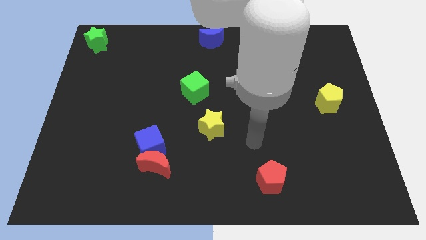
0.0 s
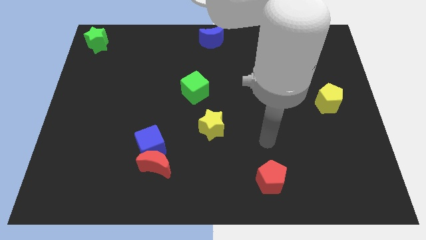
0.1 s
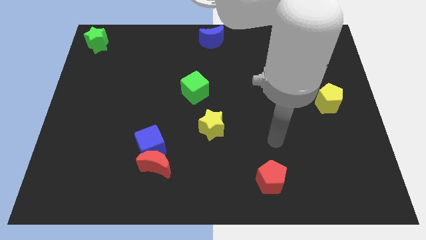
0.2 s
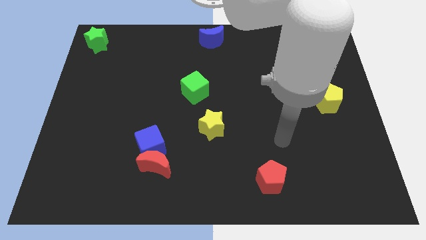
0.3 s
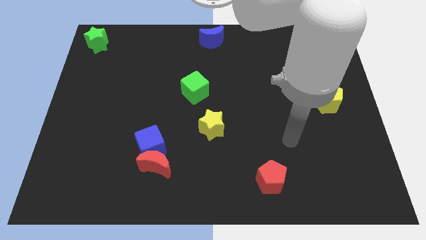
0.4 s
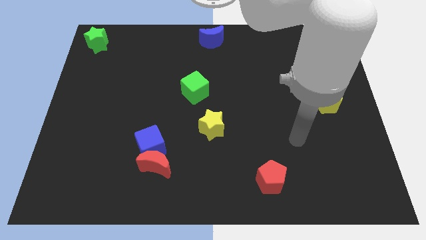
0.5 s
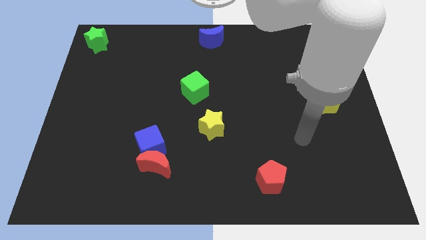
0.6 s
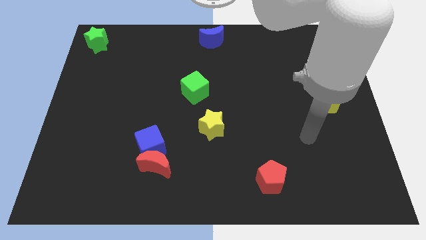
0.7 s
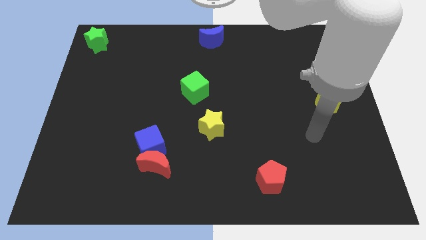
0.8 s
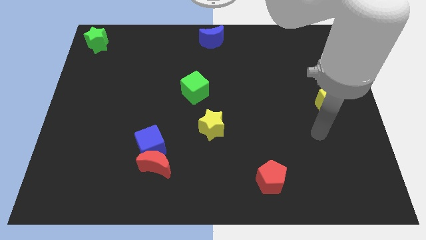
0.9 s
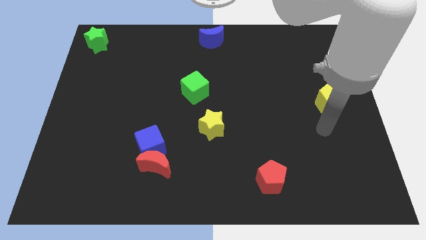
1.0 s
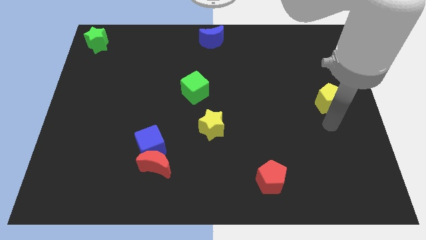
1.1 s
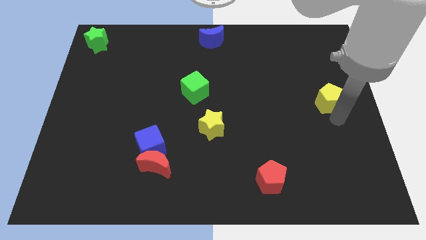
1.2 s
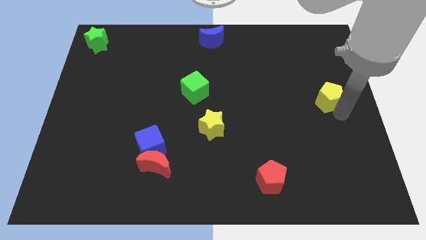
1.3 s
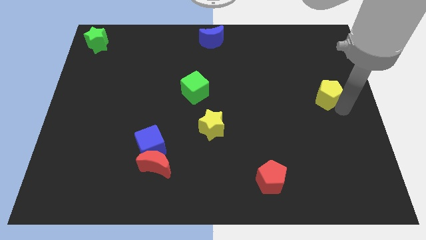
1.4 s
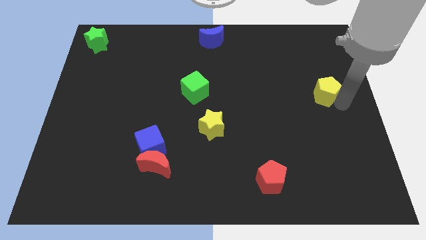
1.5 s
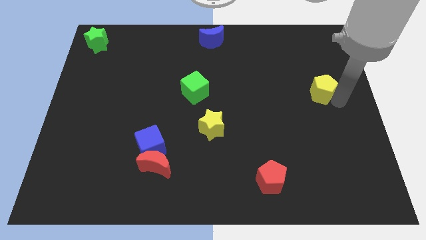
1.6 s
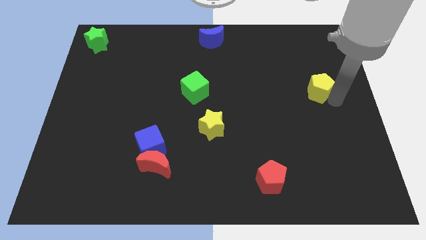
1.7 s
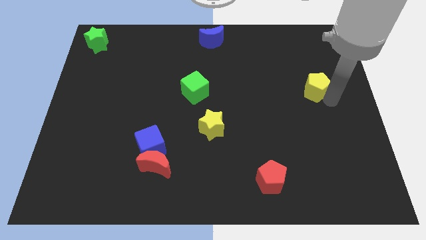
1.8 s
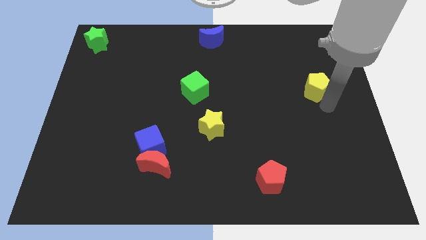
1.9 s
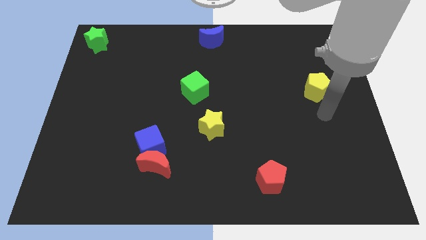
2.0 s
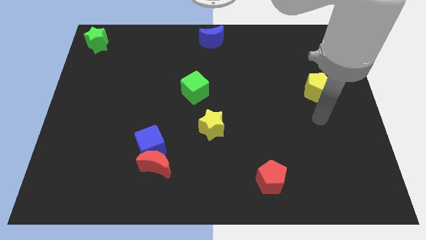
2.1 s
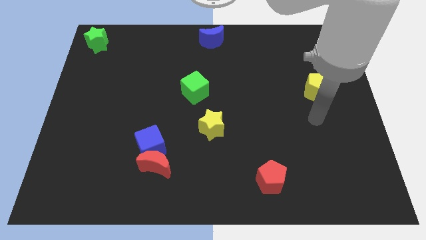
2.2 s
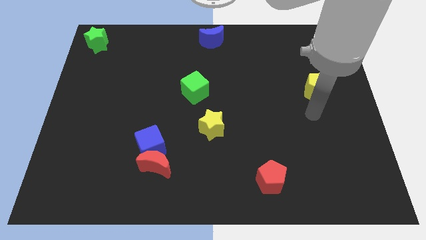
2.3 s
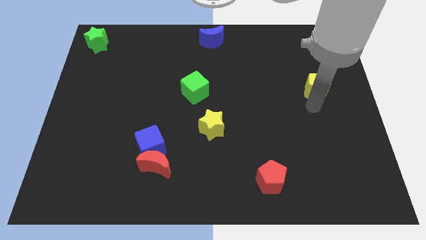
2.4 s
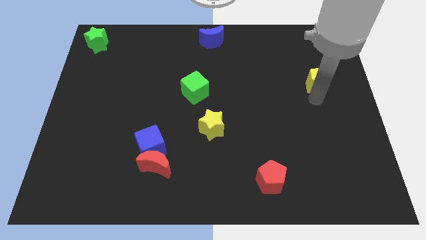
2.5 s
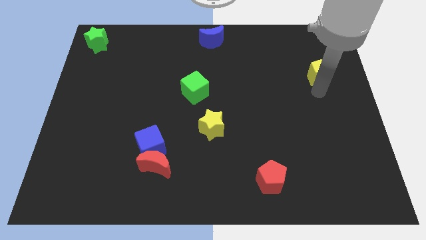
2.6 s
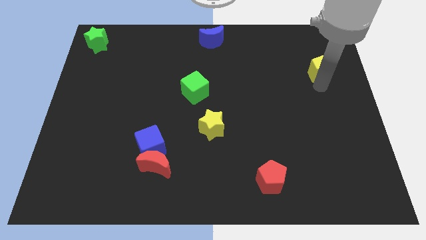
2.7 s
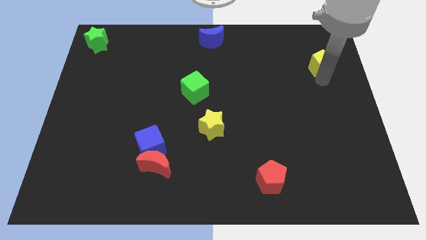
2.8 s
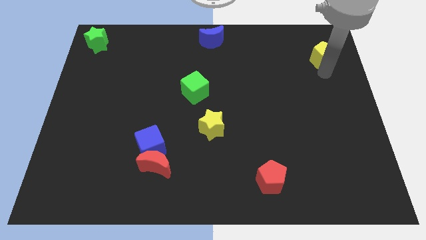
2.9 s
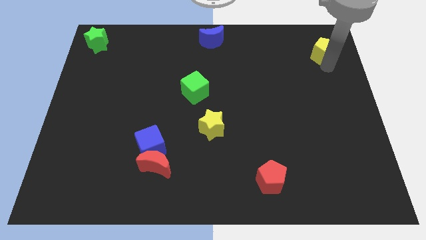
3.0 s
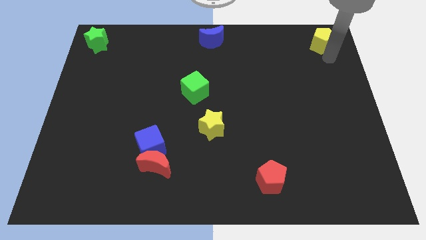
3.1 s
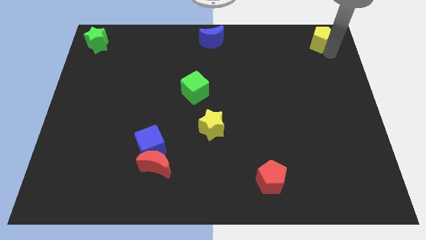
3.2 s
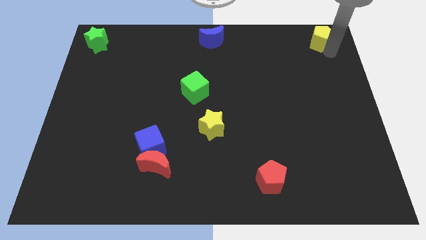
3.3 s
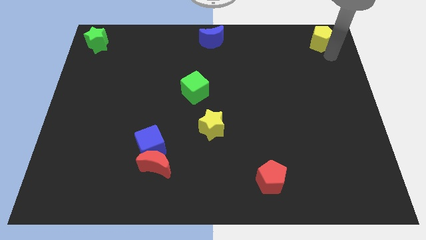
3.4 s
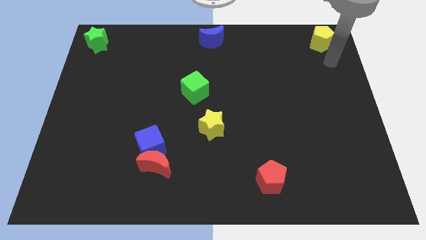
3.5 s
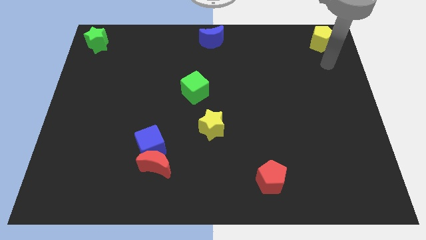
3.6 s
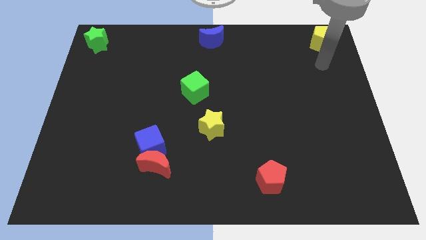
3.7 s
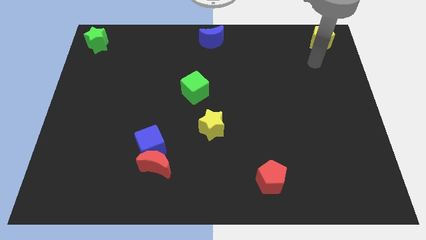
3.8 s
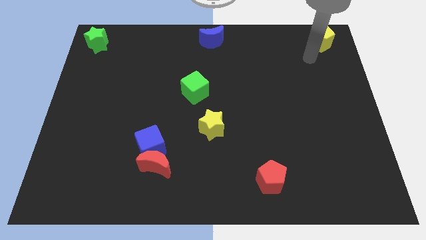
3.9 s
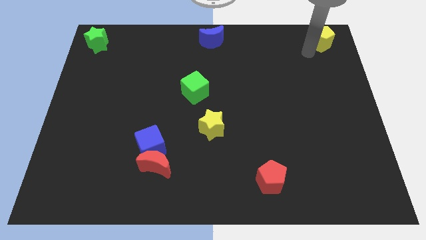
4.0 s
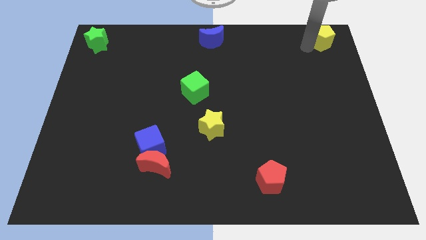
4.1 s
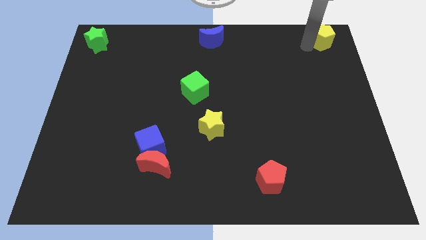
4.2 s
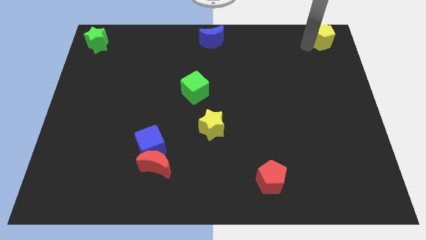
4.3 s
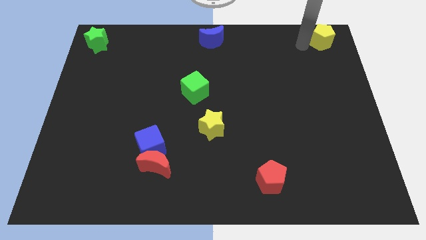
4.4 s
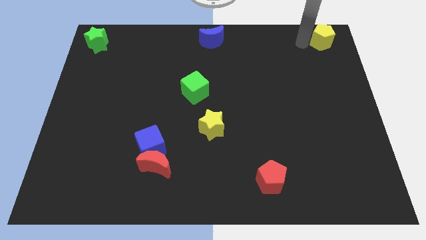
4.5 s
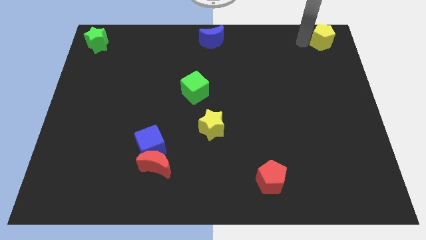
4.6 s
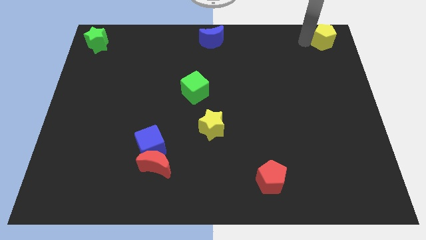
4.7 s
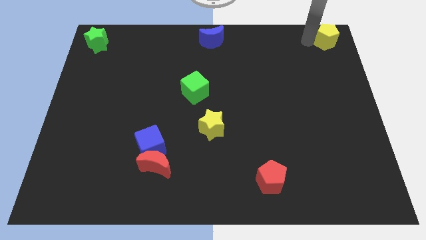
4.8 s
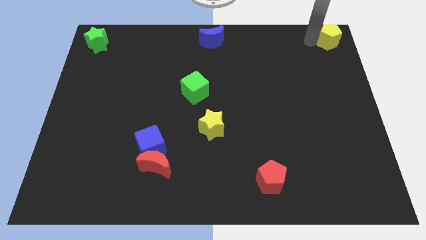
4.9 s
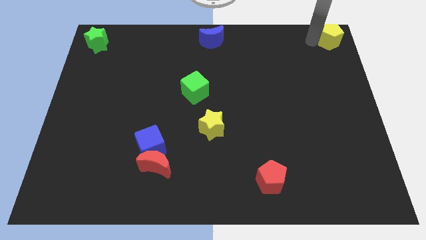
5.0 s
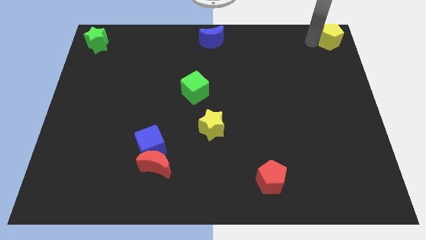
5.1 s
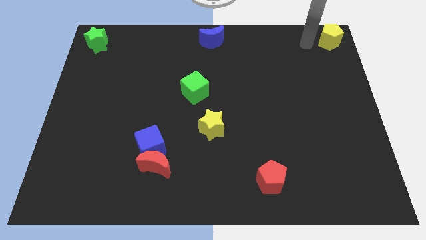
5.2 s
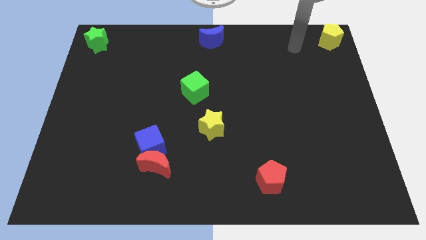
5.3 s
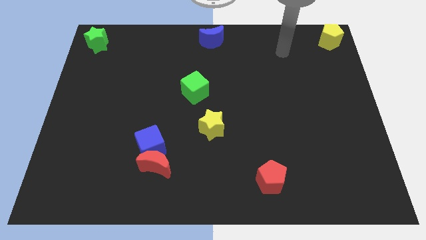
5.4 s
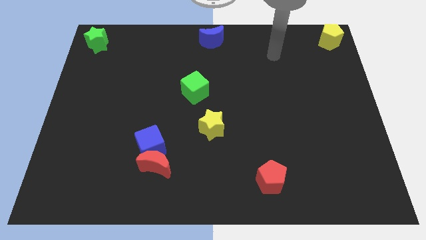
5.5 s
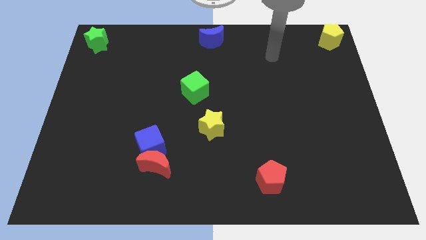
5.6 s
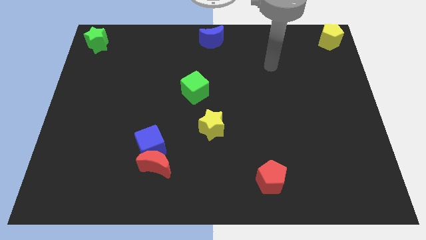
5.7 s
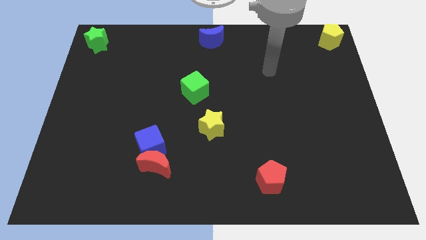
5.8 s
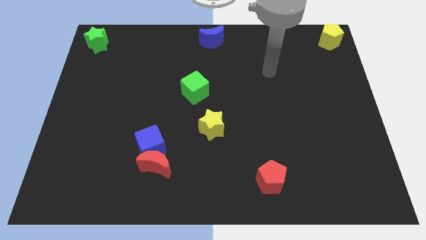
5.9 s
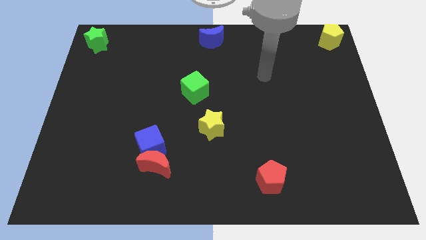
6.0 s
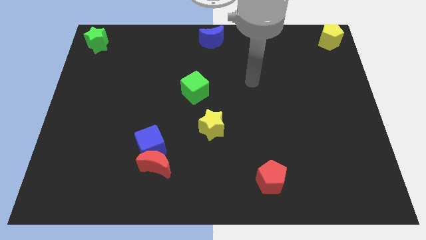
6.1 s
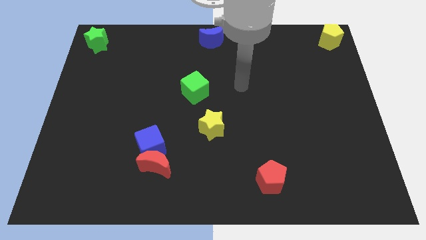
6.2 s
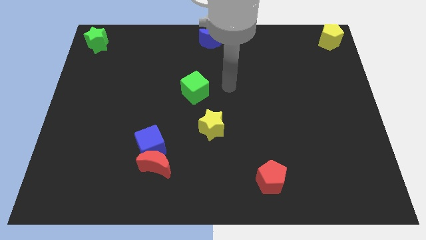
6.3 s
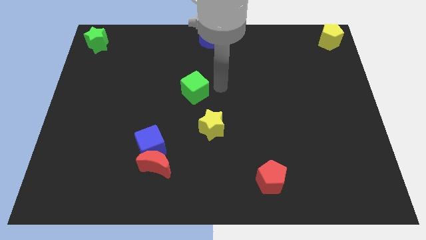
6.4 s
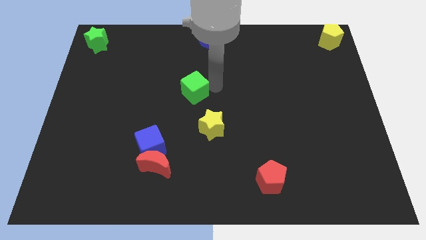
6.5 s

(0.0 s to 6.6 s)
place the yellow pentagon at the top right corner of the board

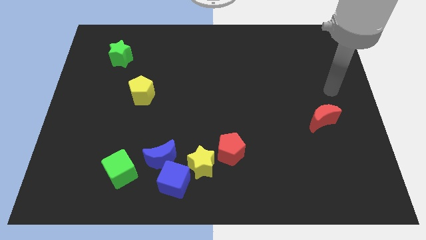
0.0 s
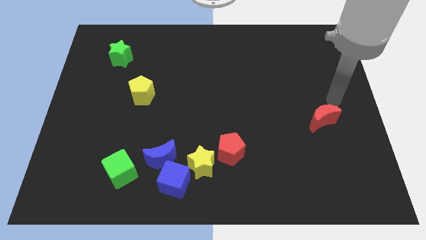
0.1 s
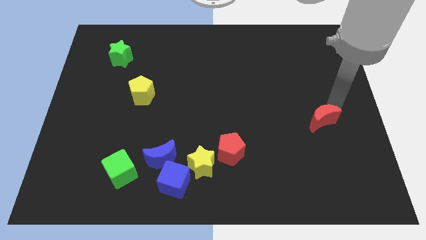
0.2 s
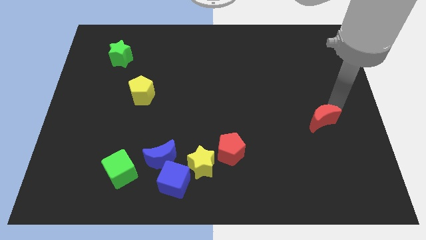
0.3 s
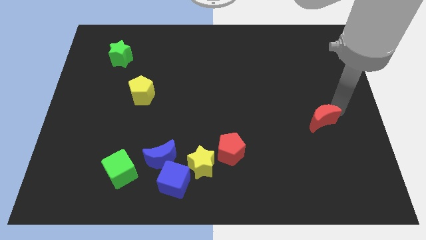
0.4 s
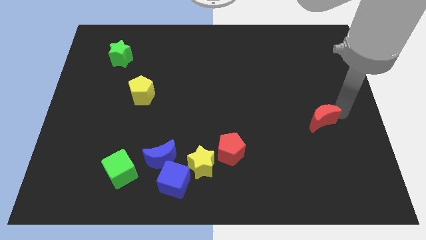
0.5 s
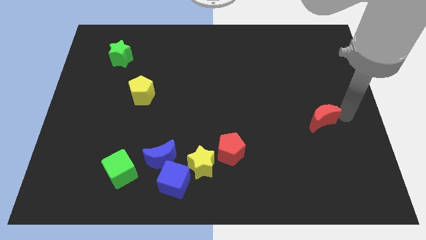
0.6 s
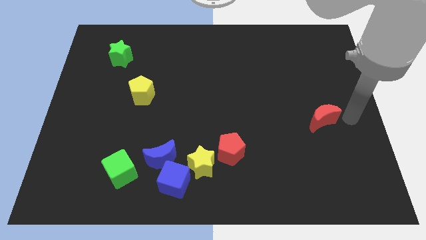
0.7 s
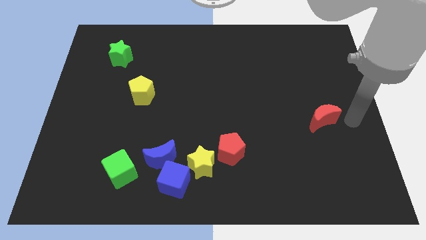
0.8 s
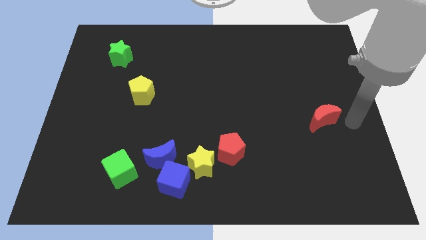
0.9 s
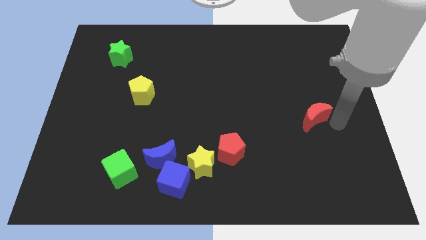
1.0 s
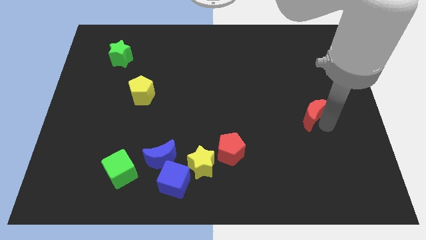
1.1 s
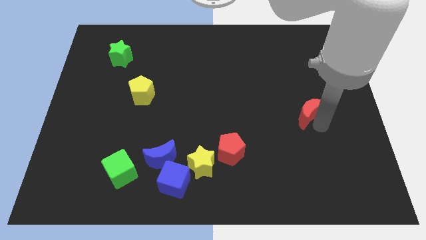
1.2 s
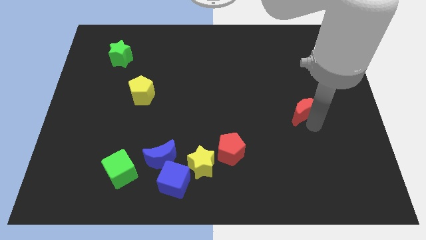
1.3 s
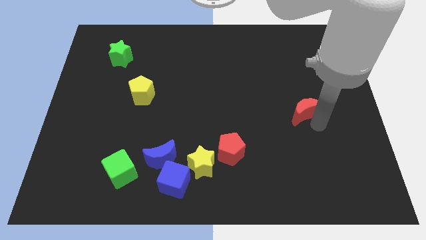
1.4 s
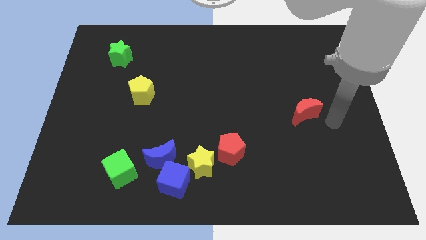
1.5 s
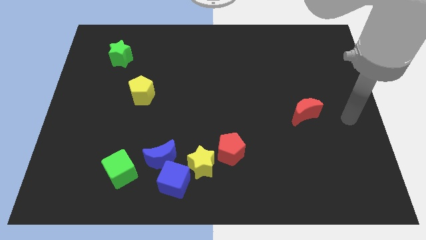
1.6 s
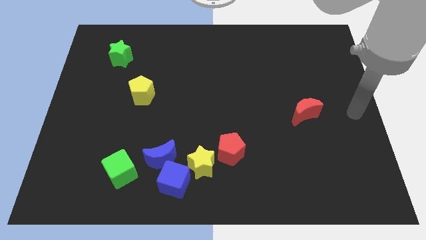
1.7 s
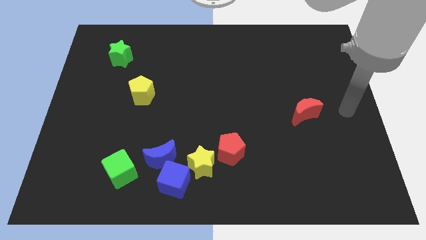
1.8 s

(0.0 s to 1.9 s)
slightly push the red moon to the left

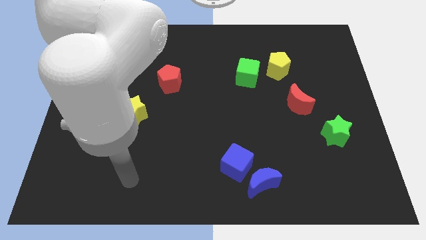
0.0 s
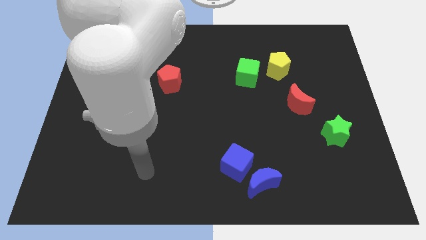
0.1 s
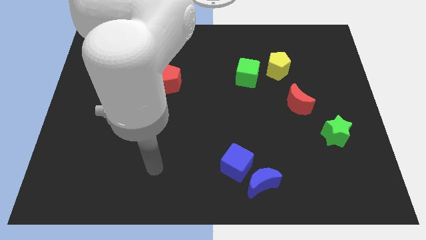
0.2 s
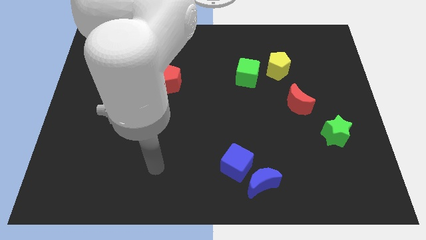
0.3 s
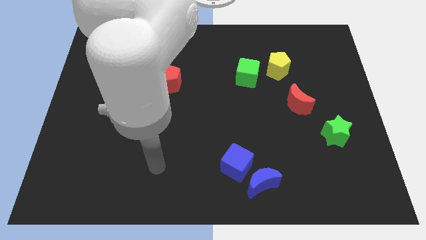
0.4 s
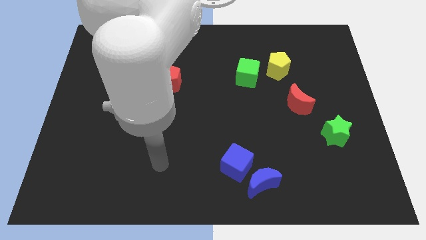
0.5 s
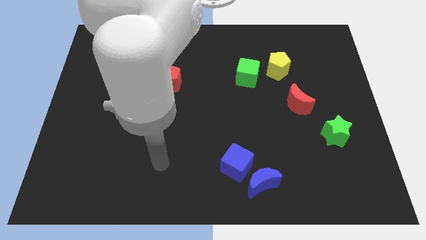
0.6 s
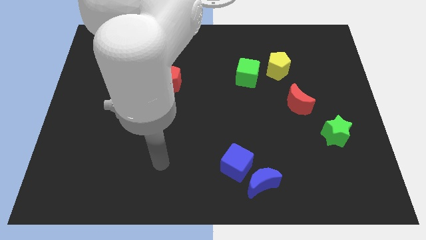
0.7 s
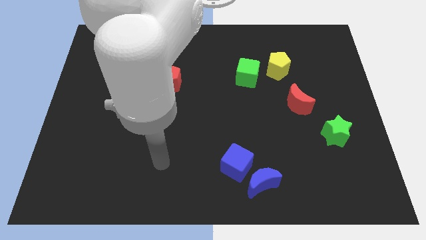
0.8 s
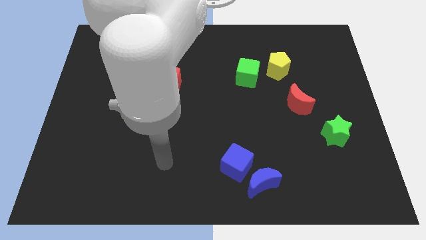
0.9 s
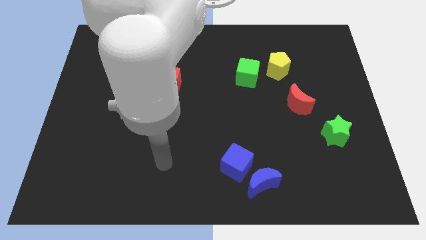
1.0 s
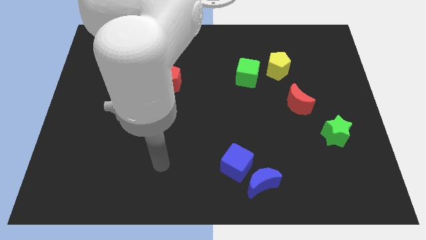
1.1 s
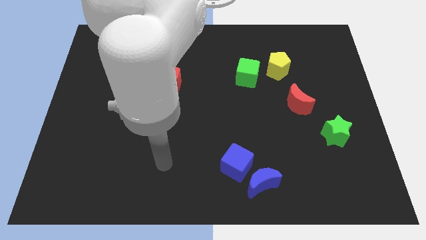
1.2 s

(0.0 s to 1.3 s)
place your hand vertically below the red pentagon
